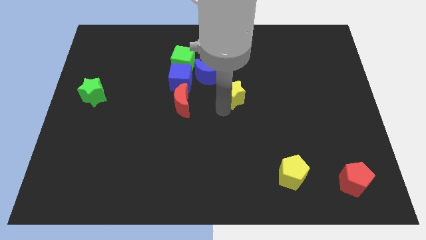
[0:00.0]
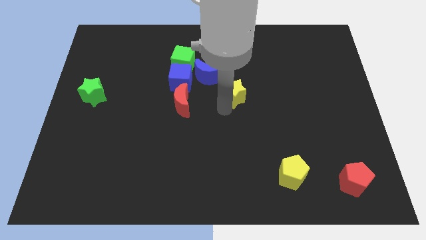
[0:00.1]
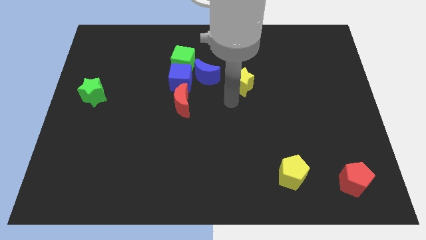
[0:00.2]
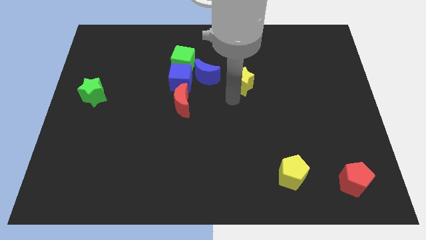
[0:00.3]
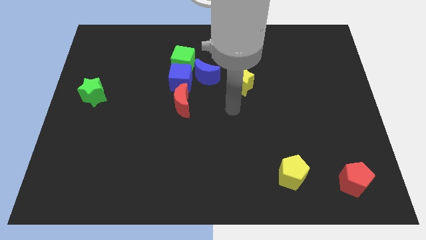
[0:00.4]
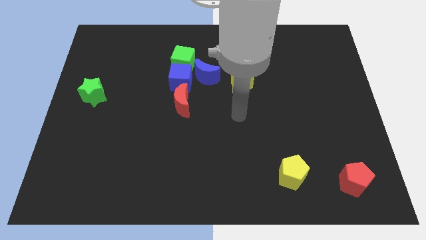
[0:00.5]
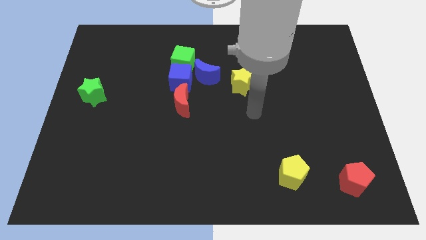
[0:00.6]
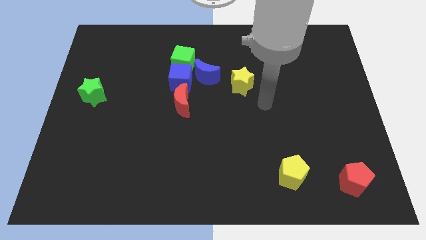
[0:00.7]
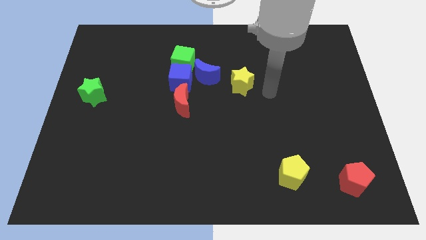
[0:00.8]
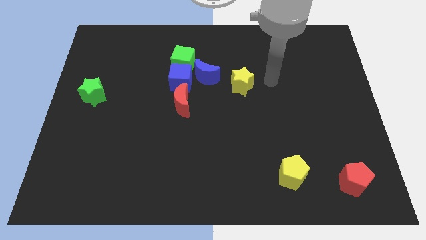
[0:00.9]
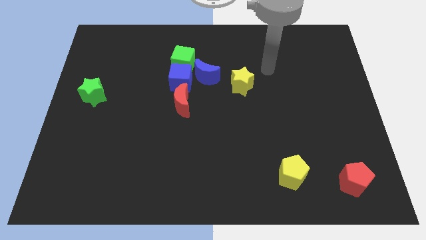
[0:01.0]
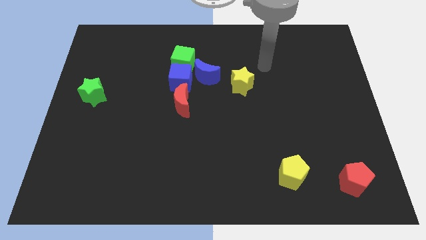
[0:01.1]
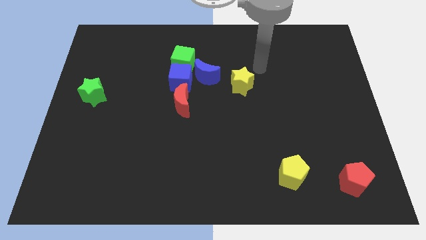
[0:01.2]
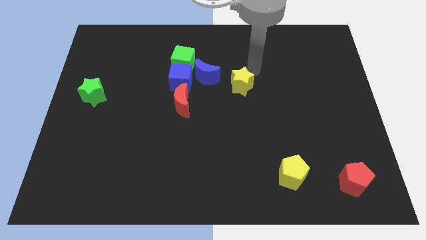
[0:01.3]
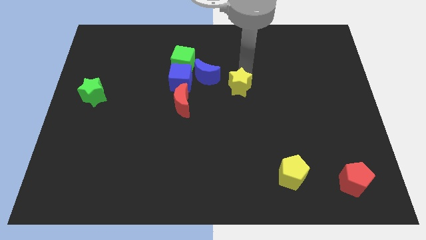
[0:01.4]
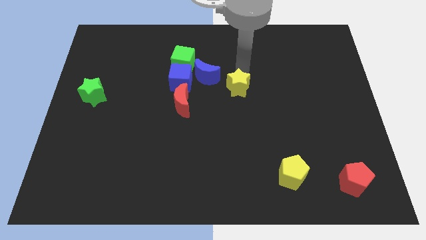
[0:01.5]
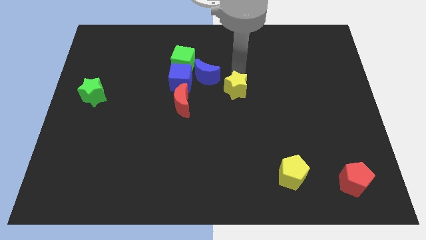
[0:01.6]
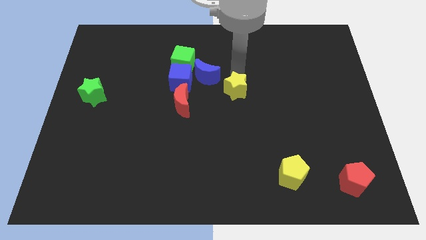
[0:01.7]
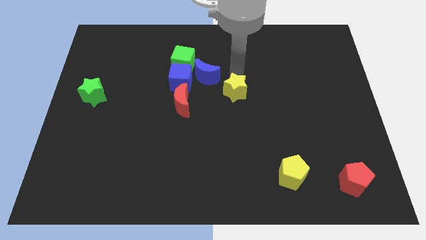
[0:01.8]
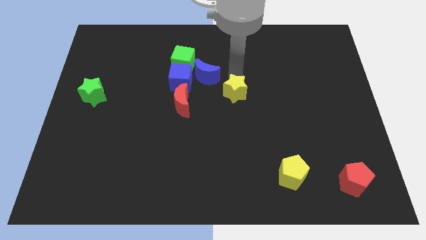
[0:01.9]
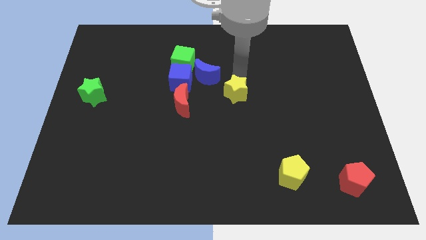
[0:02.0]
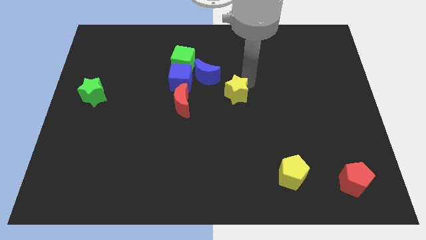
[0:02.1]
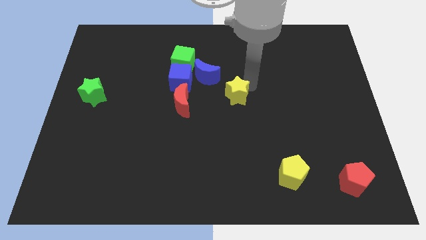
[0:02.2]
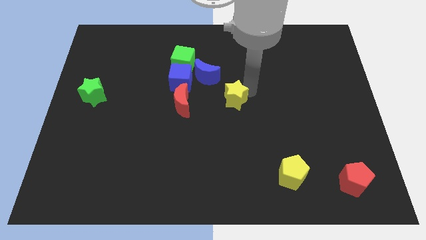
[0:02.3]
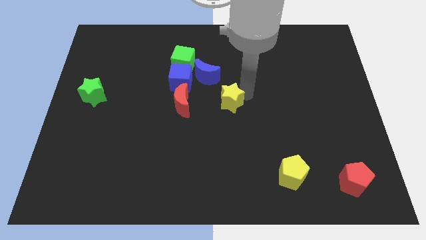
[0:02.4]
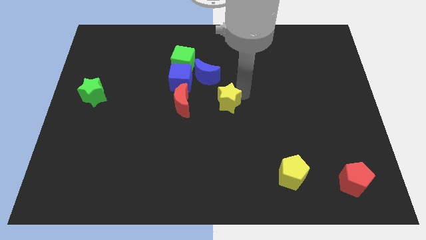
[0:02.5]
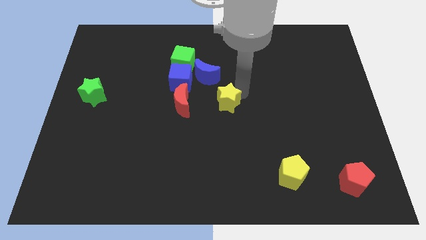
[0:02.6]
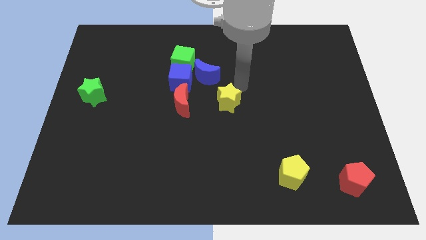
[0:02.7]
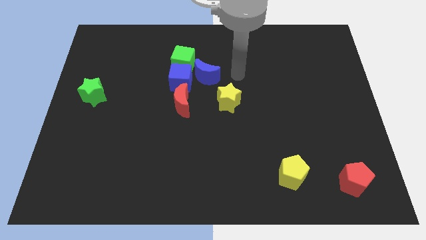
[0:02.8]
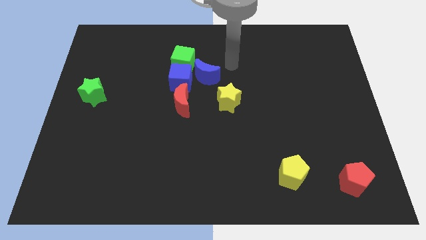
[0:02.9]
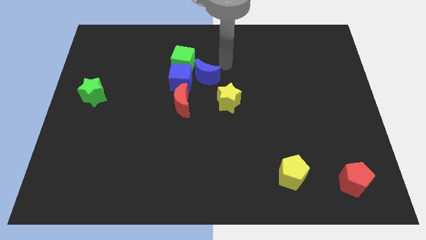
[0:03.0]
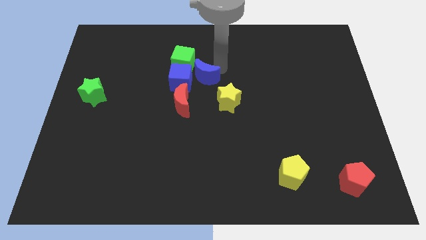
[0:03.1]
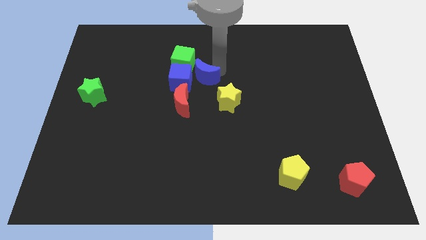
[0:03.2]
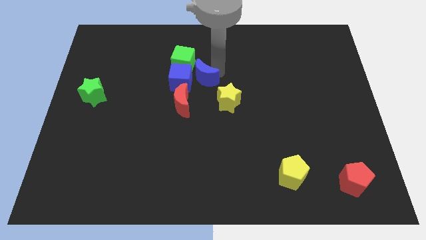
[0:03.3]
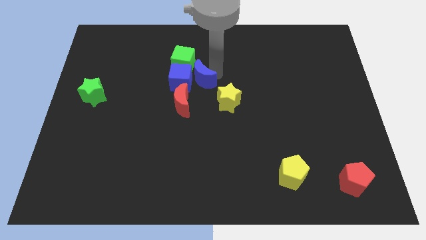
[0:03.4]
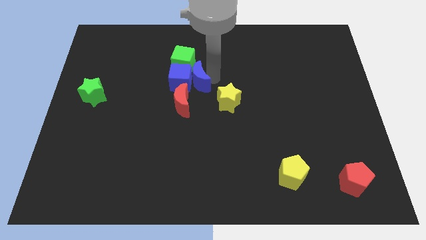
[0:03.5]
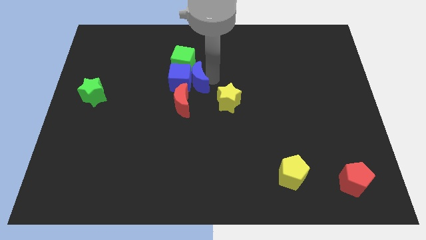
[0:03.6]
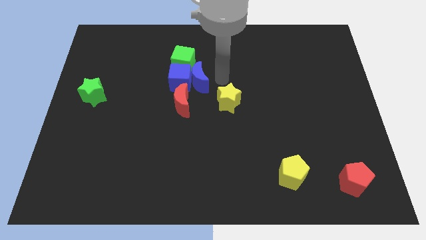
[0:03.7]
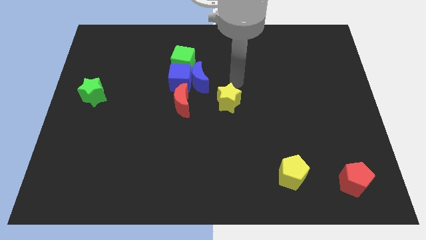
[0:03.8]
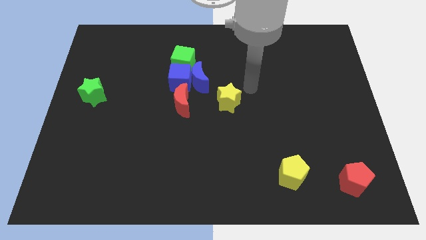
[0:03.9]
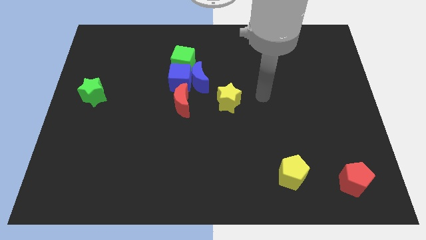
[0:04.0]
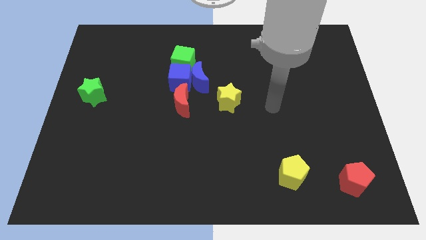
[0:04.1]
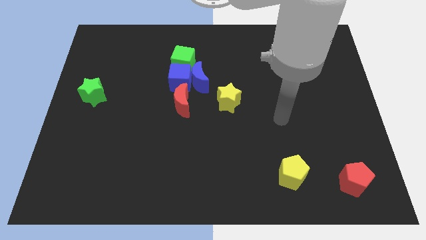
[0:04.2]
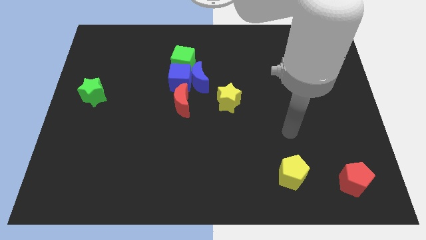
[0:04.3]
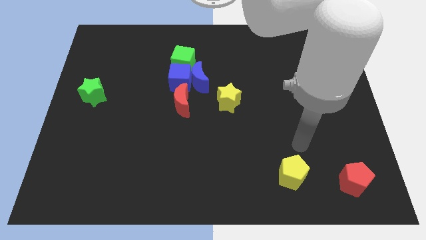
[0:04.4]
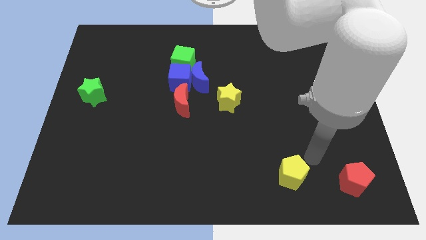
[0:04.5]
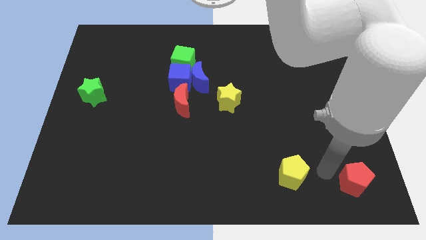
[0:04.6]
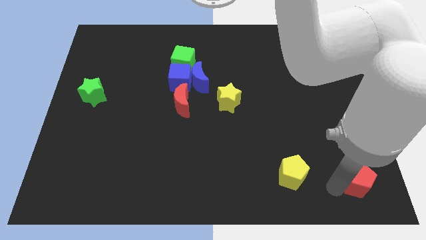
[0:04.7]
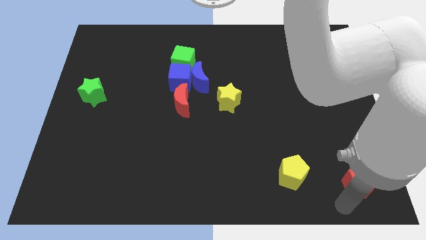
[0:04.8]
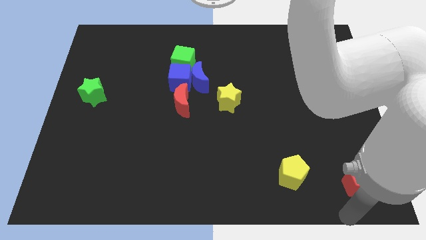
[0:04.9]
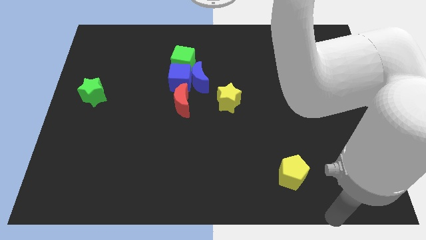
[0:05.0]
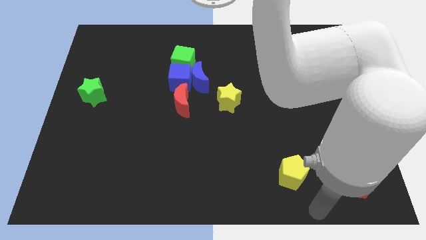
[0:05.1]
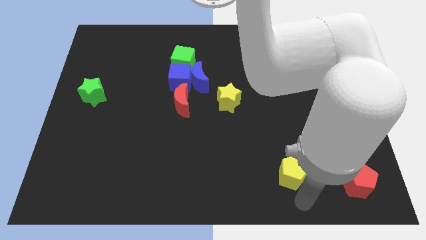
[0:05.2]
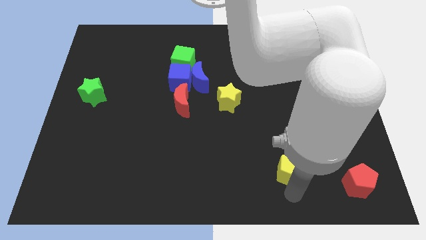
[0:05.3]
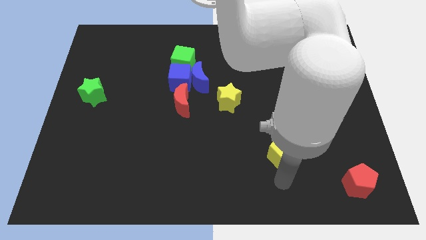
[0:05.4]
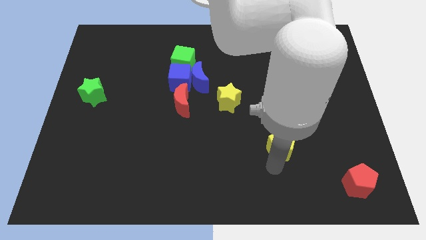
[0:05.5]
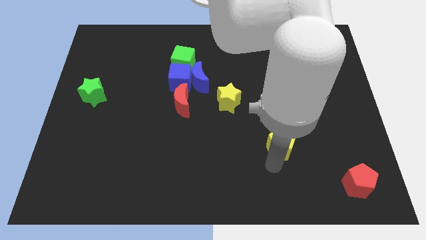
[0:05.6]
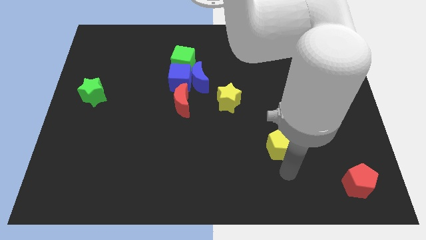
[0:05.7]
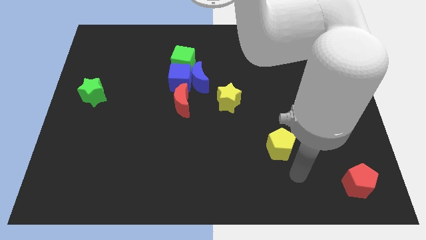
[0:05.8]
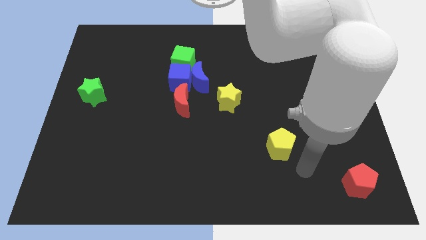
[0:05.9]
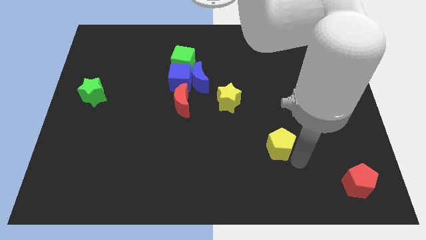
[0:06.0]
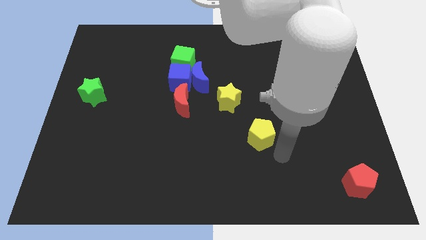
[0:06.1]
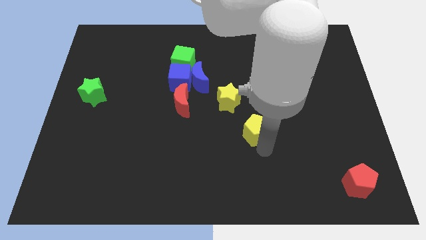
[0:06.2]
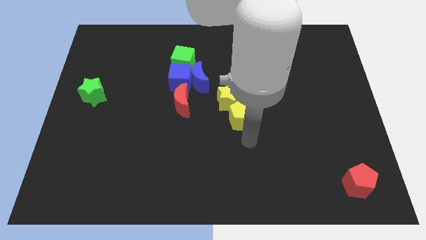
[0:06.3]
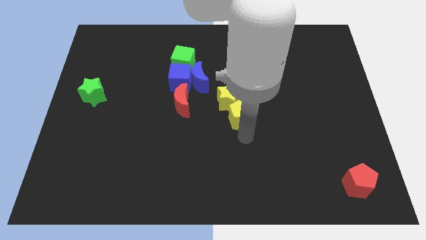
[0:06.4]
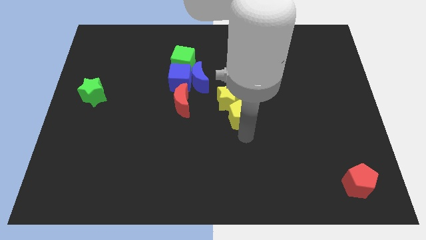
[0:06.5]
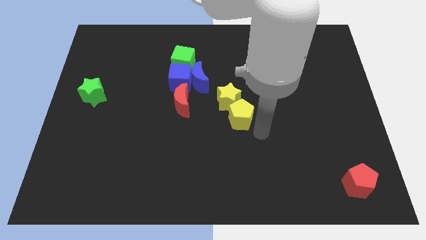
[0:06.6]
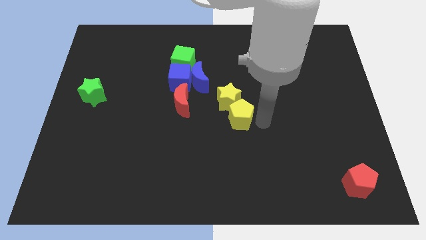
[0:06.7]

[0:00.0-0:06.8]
push the yellow pentagon into the yellow star

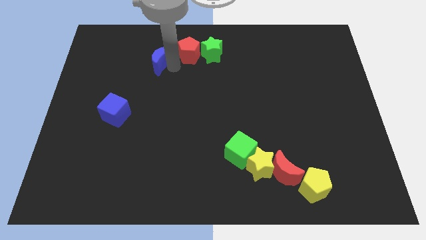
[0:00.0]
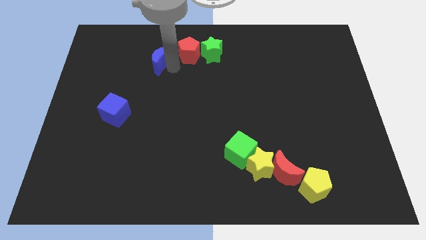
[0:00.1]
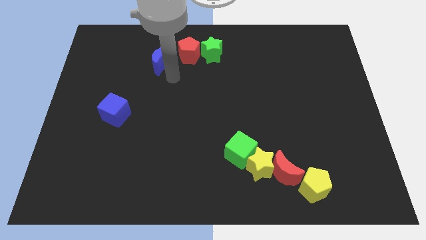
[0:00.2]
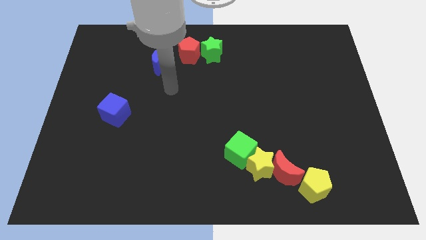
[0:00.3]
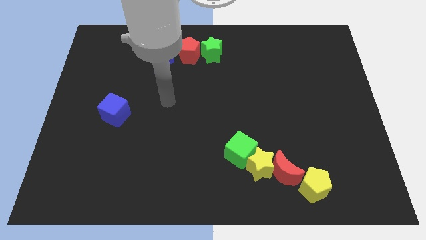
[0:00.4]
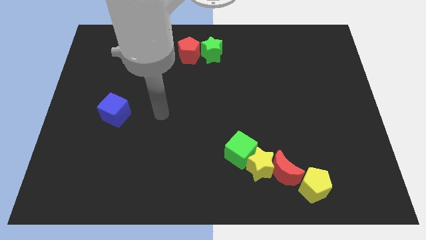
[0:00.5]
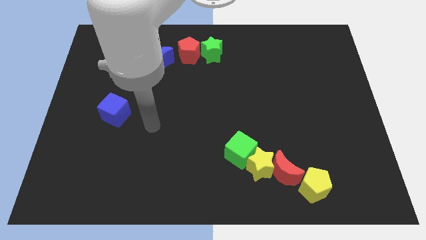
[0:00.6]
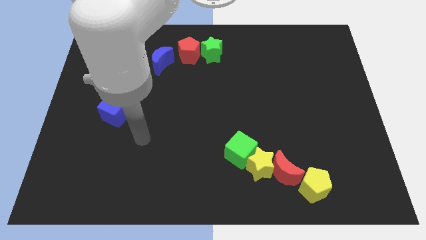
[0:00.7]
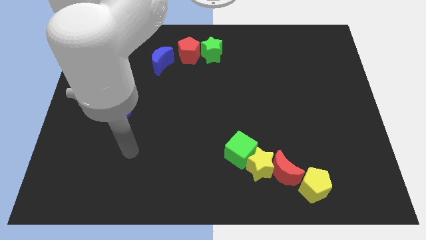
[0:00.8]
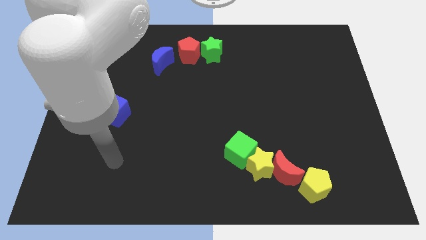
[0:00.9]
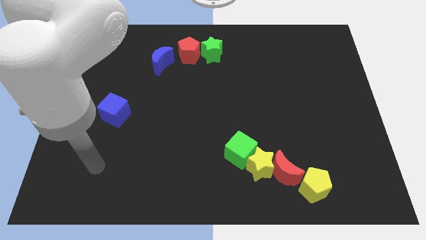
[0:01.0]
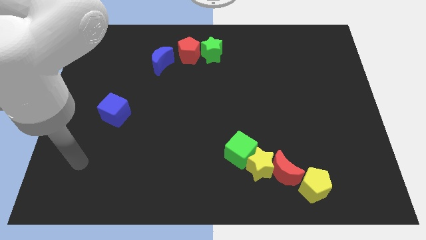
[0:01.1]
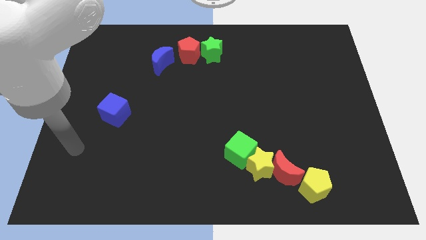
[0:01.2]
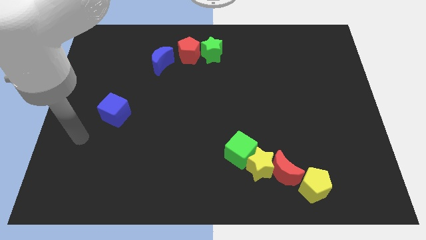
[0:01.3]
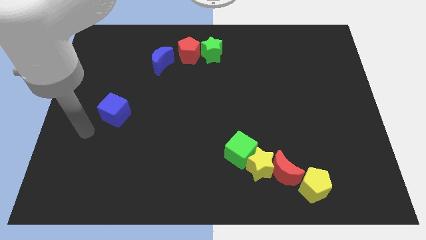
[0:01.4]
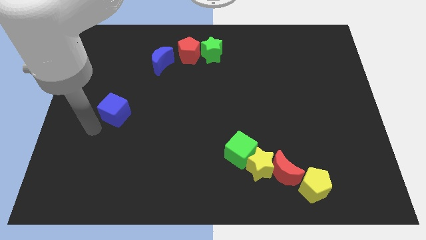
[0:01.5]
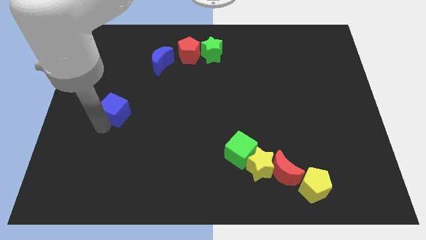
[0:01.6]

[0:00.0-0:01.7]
point your arm at the bottom of blue cube

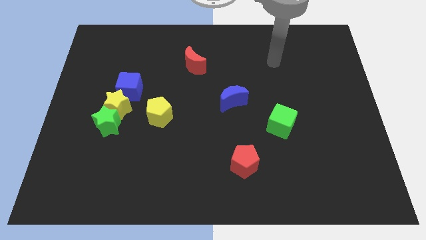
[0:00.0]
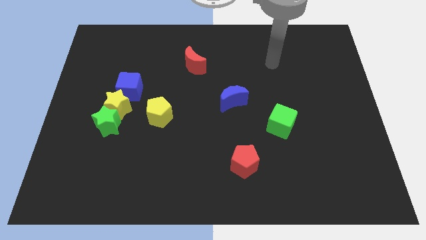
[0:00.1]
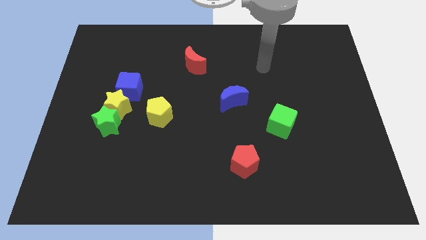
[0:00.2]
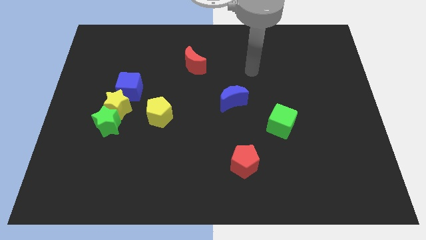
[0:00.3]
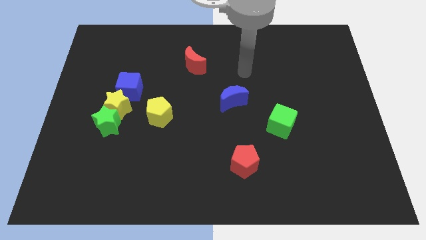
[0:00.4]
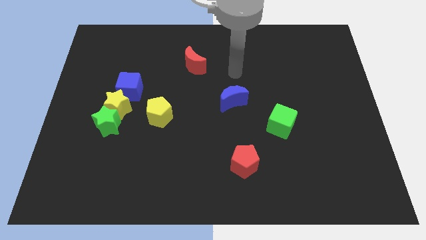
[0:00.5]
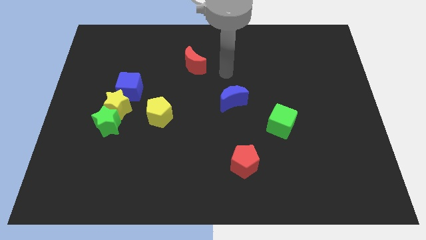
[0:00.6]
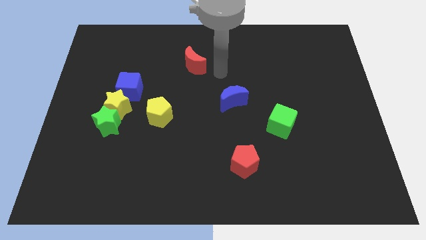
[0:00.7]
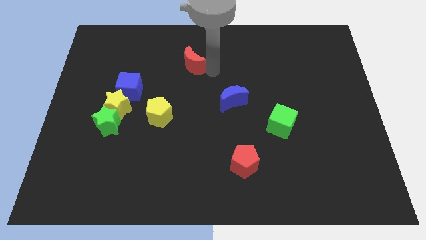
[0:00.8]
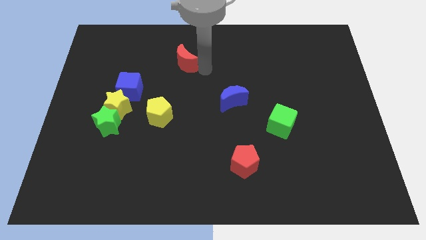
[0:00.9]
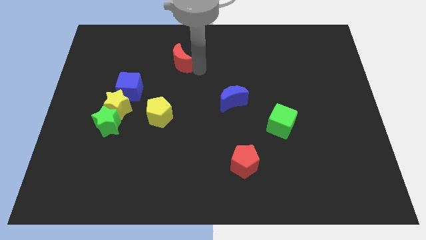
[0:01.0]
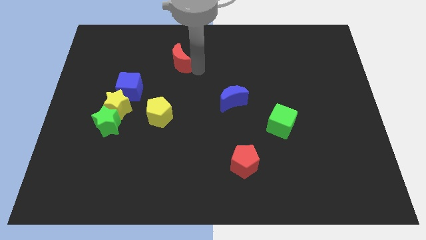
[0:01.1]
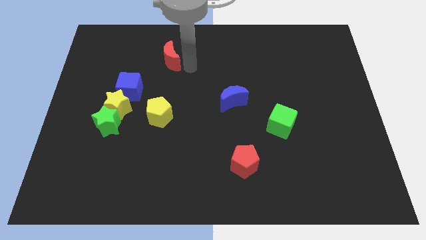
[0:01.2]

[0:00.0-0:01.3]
push the red crescent slightly to the left
